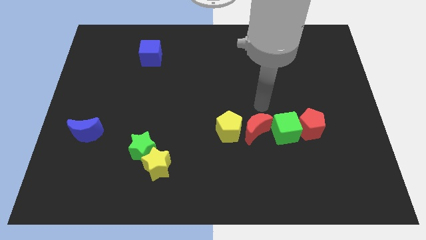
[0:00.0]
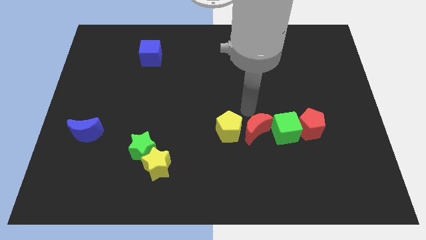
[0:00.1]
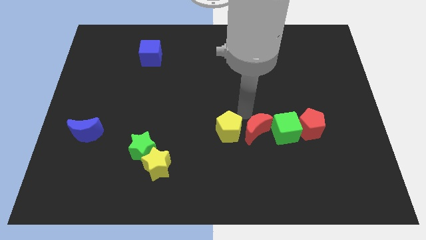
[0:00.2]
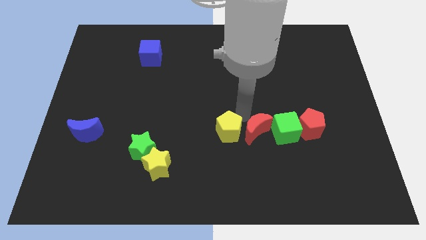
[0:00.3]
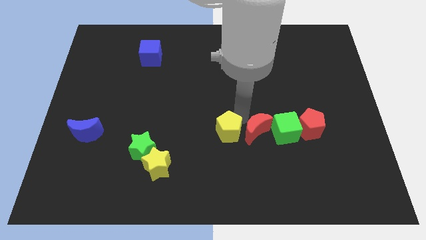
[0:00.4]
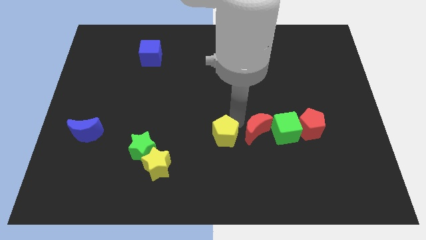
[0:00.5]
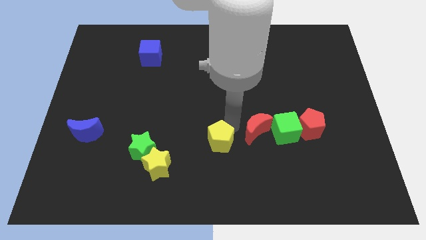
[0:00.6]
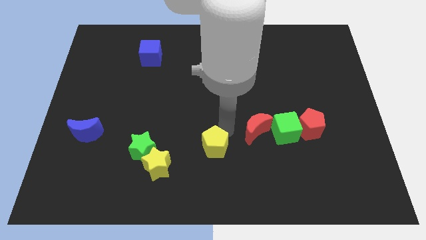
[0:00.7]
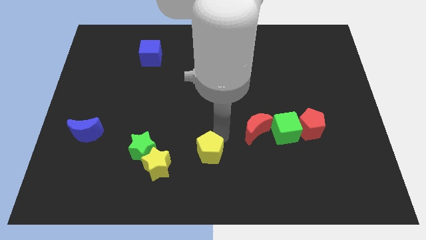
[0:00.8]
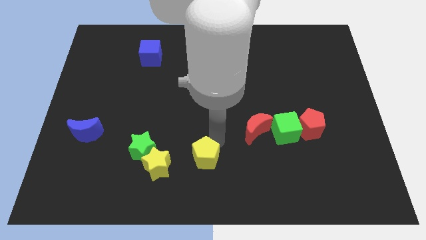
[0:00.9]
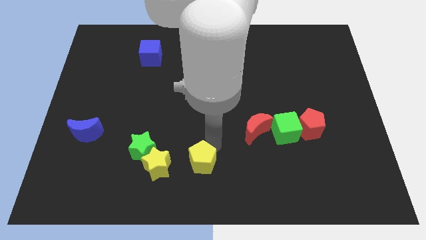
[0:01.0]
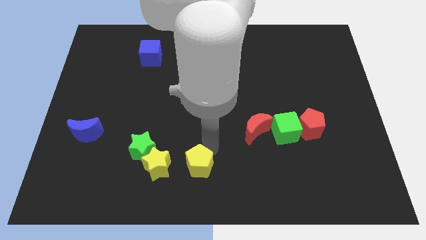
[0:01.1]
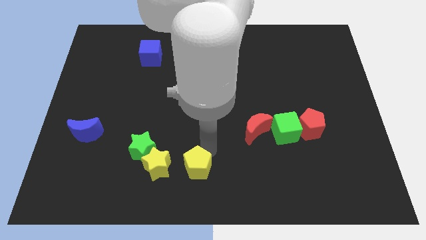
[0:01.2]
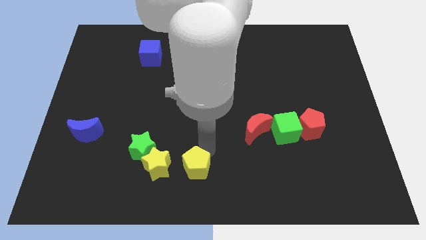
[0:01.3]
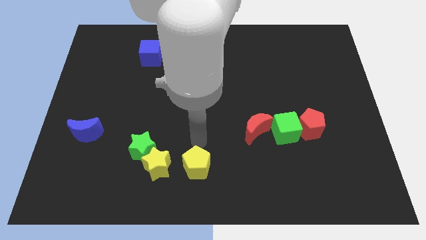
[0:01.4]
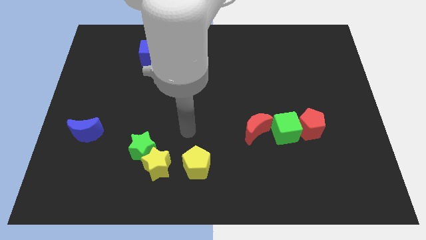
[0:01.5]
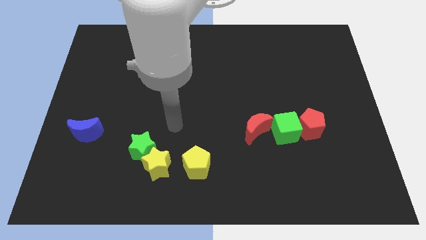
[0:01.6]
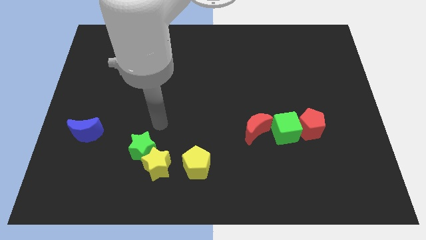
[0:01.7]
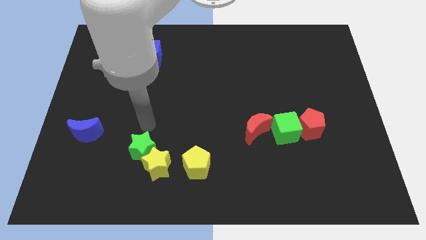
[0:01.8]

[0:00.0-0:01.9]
move the yellow pentagon parallel to the yellow star

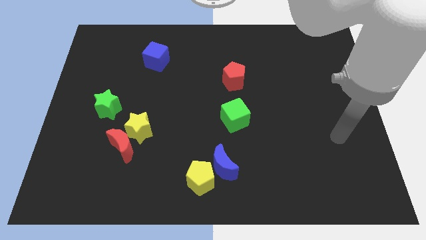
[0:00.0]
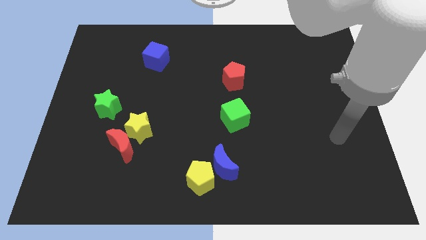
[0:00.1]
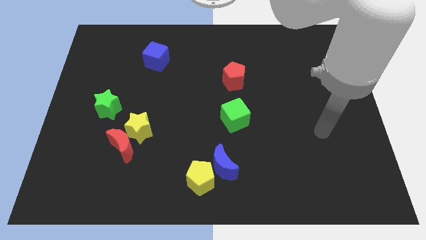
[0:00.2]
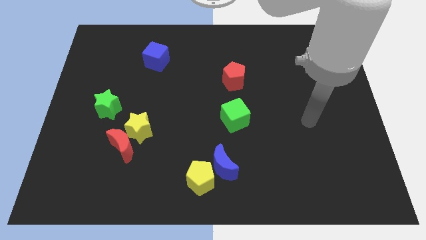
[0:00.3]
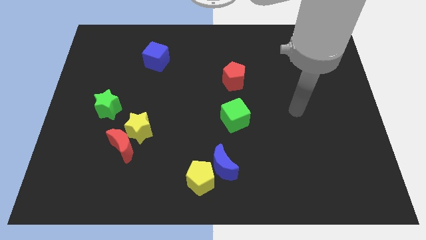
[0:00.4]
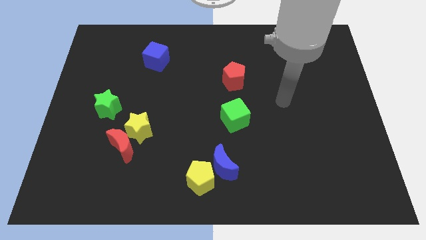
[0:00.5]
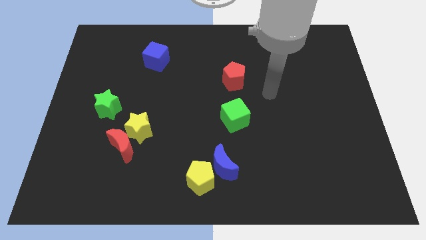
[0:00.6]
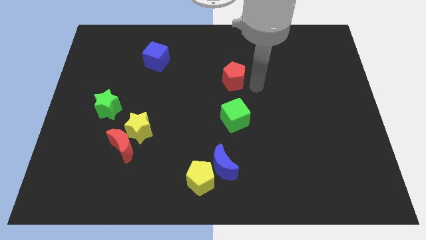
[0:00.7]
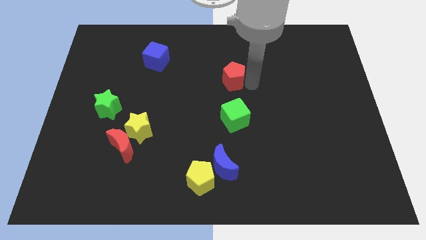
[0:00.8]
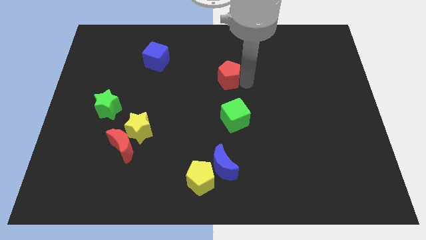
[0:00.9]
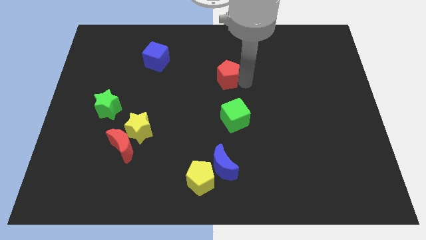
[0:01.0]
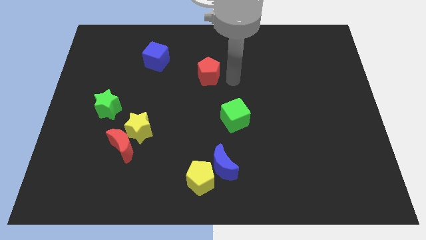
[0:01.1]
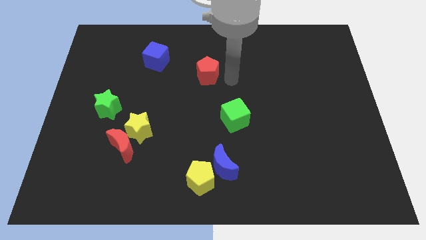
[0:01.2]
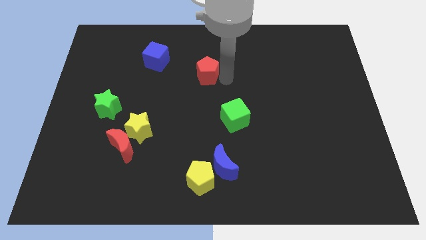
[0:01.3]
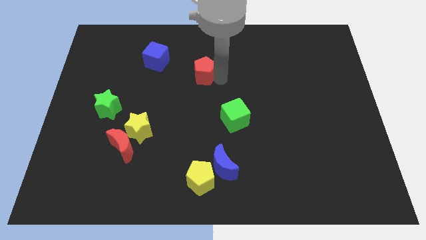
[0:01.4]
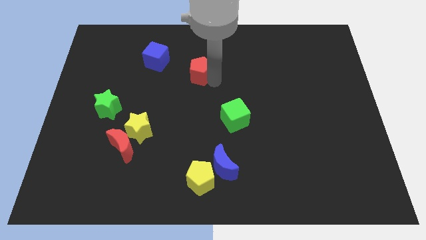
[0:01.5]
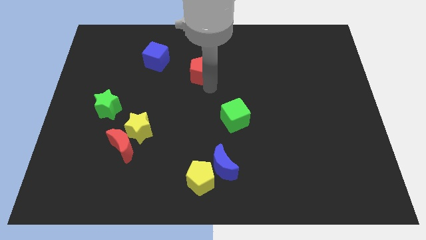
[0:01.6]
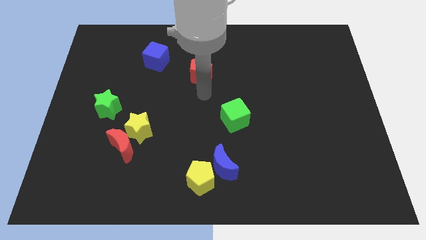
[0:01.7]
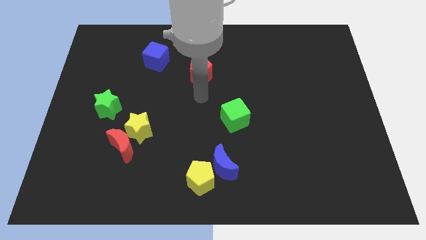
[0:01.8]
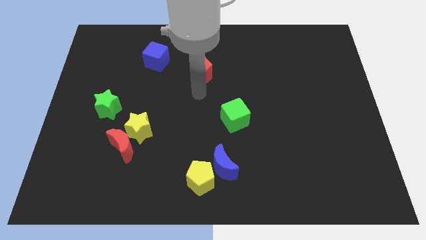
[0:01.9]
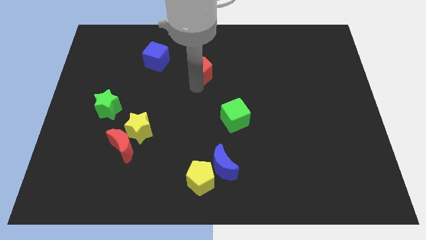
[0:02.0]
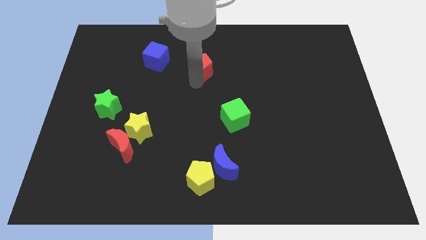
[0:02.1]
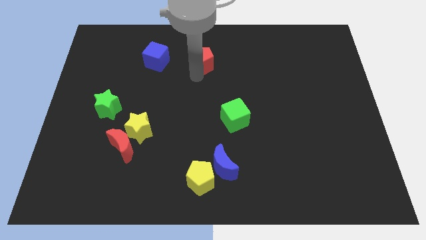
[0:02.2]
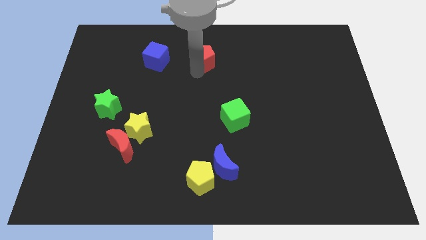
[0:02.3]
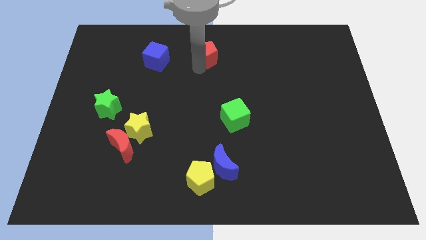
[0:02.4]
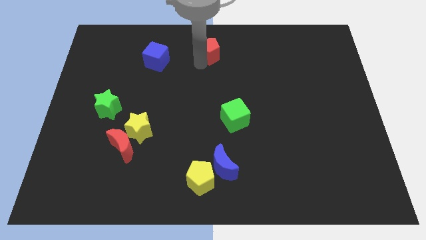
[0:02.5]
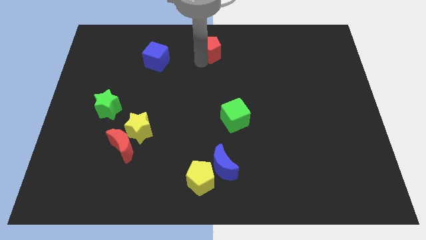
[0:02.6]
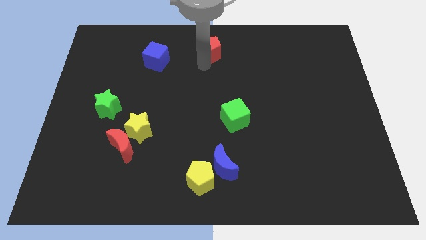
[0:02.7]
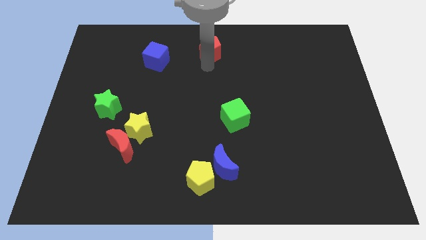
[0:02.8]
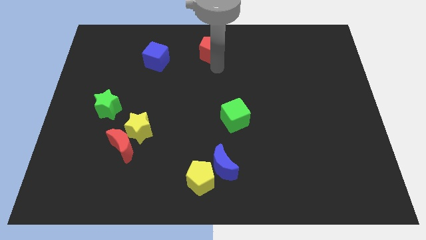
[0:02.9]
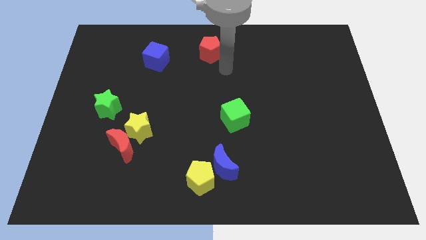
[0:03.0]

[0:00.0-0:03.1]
slide the red pentagon to the top center of the table

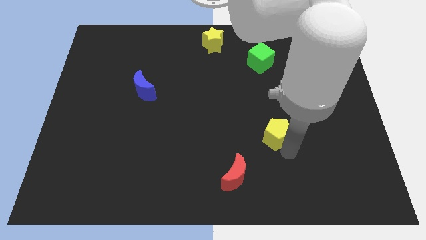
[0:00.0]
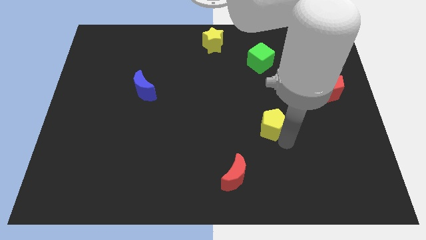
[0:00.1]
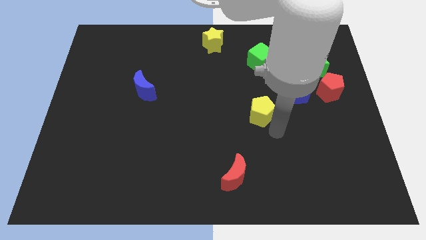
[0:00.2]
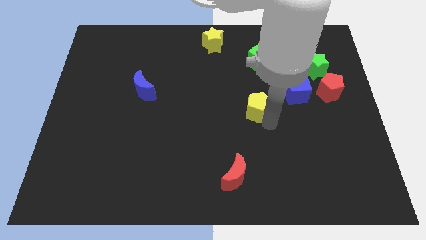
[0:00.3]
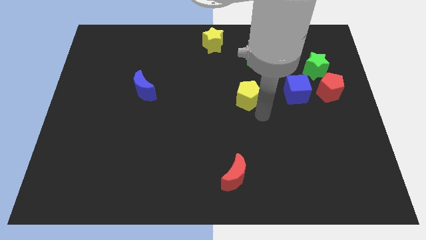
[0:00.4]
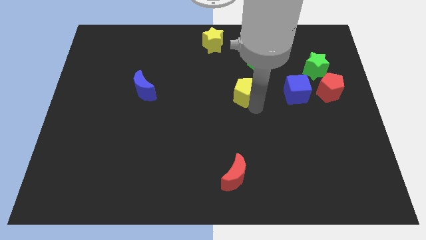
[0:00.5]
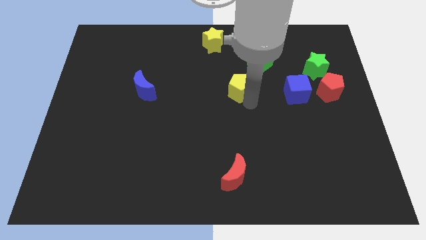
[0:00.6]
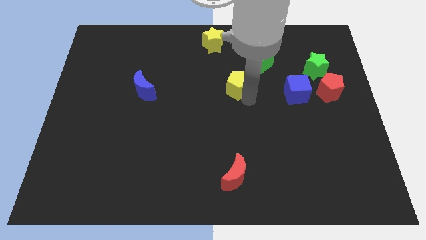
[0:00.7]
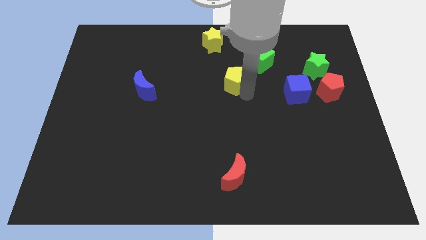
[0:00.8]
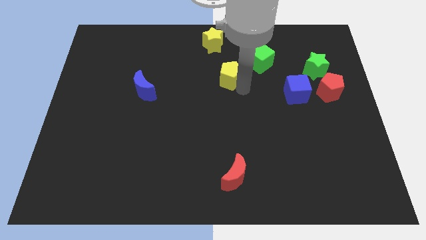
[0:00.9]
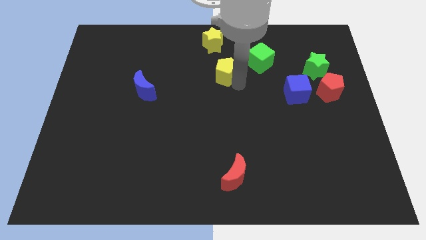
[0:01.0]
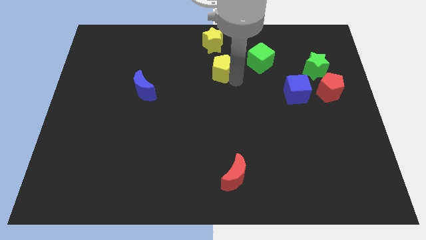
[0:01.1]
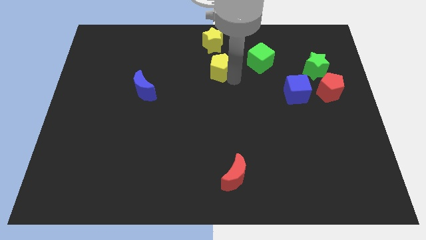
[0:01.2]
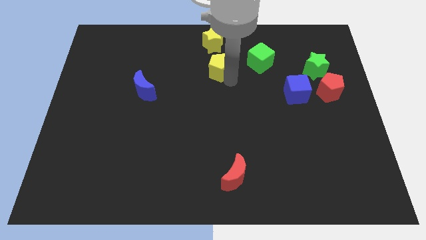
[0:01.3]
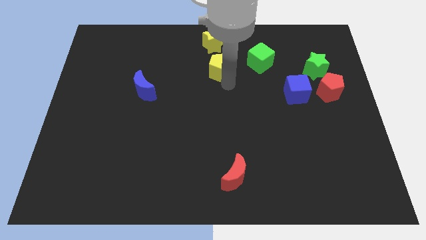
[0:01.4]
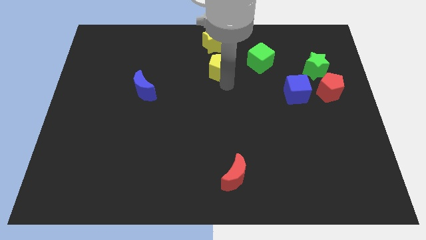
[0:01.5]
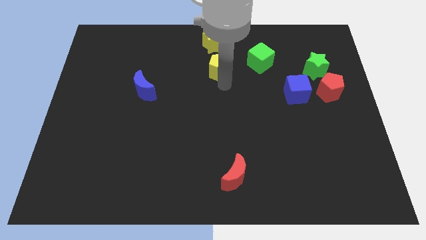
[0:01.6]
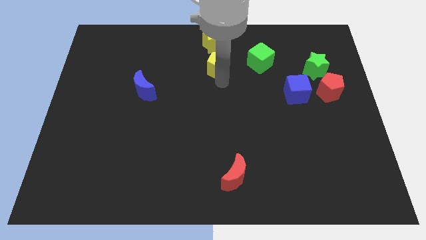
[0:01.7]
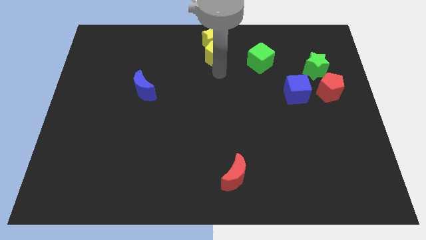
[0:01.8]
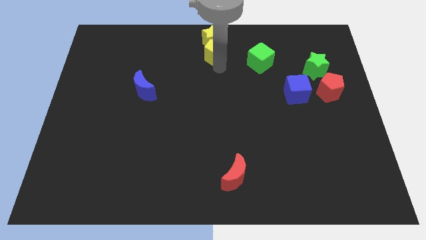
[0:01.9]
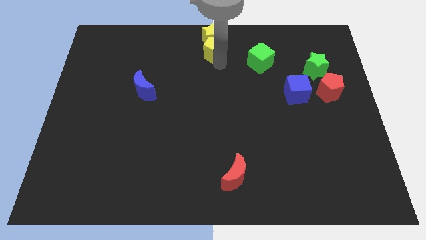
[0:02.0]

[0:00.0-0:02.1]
add yellow pentagon into yellow star

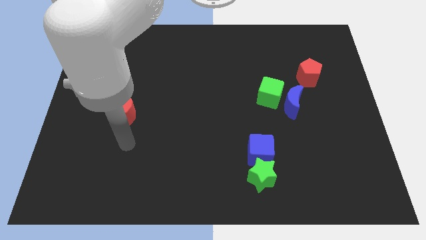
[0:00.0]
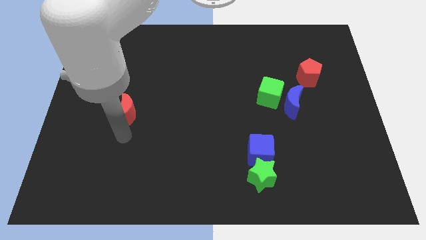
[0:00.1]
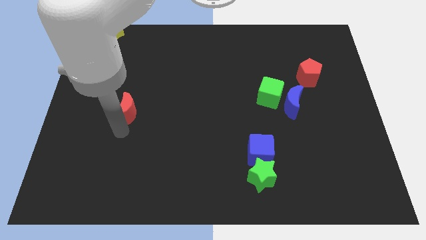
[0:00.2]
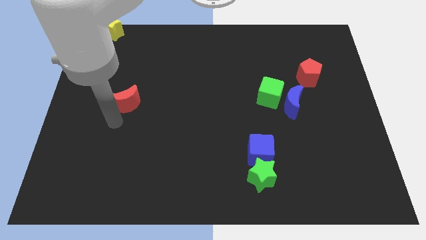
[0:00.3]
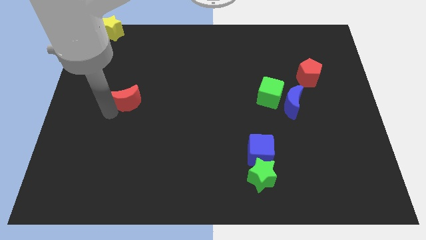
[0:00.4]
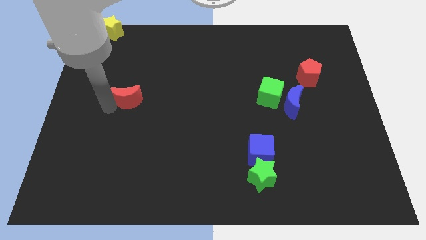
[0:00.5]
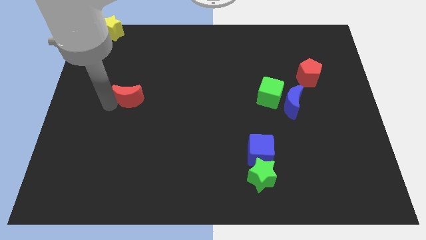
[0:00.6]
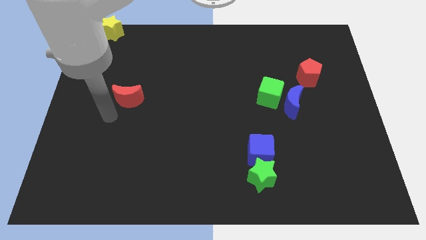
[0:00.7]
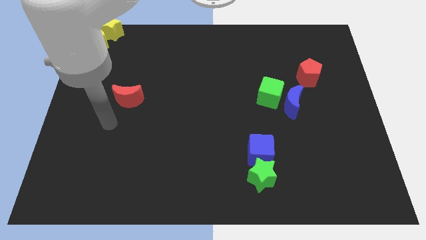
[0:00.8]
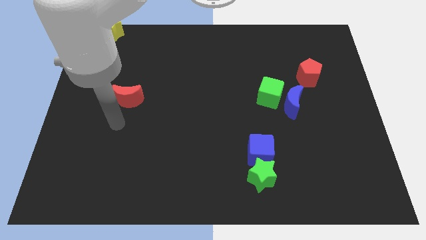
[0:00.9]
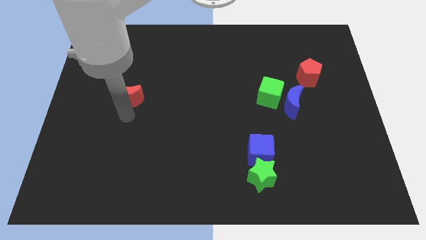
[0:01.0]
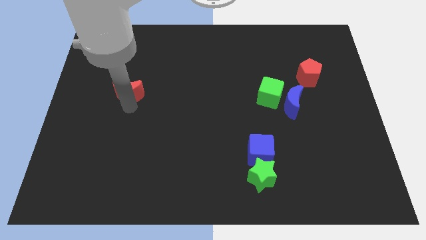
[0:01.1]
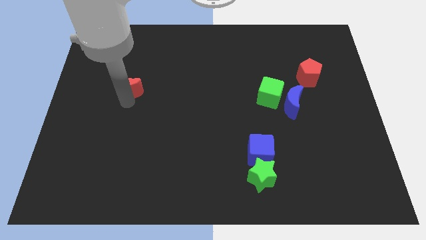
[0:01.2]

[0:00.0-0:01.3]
push the red moon upward

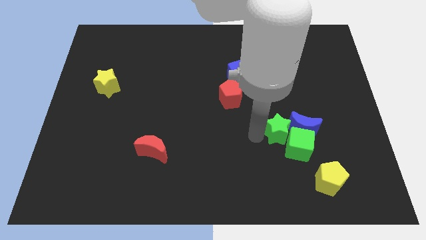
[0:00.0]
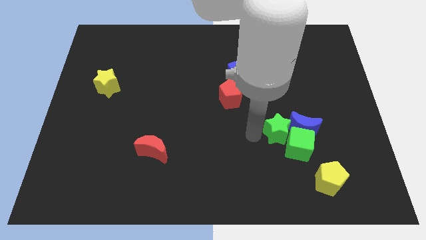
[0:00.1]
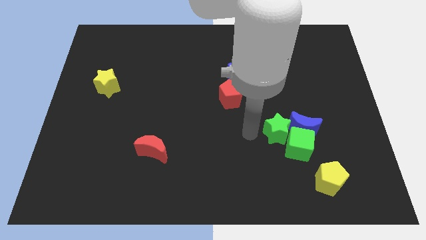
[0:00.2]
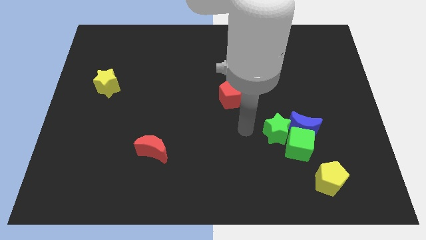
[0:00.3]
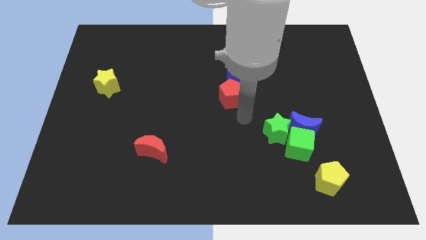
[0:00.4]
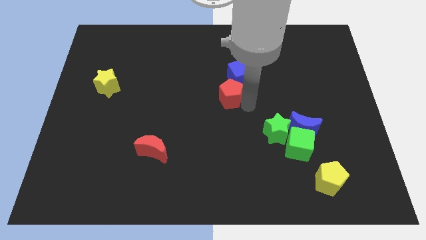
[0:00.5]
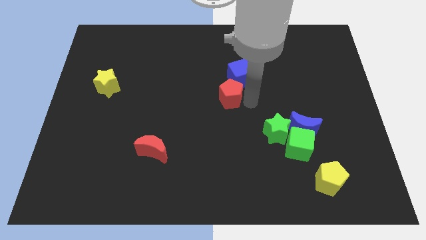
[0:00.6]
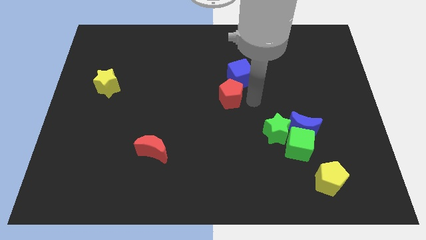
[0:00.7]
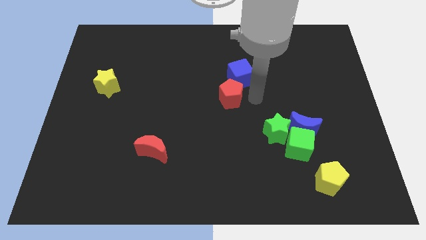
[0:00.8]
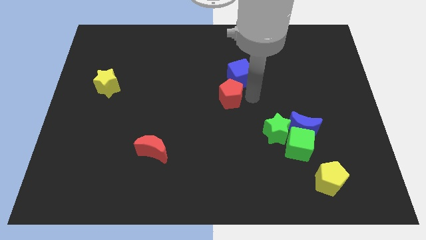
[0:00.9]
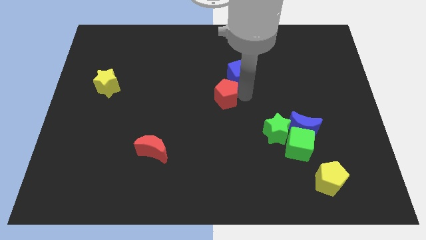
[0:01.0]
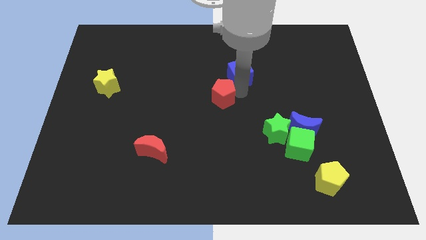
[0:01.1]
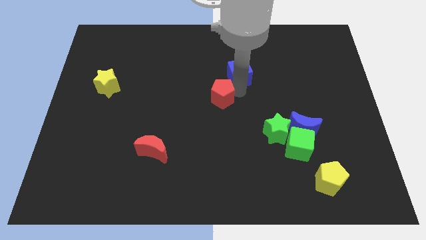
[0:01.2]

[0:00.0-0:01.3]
move the red pentagon slightly to the left
